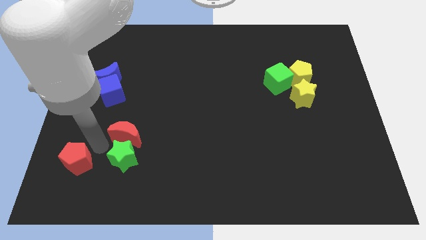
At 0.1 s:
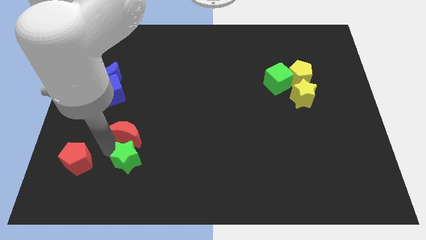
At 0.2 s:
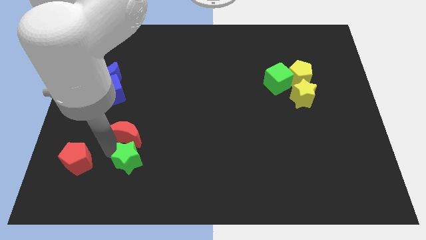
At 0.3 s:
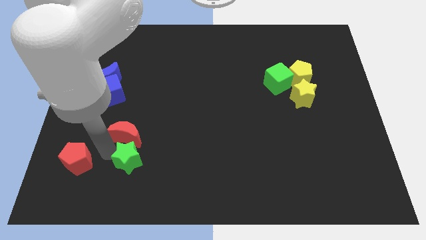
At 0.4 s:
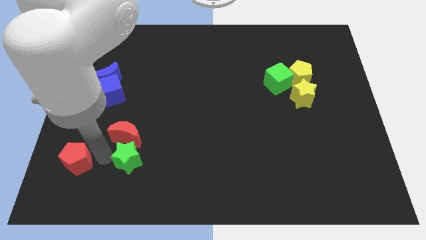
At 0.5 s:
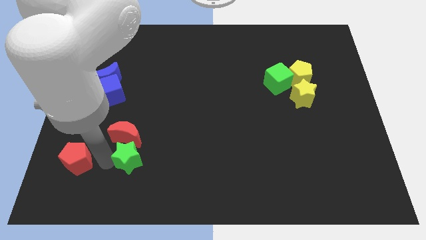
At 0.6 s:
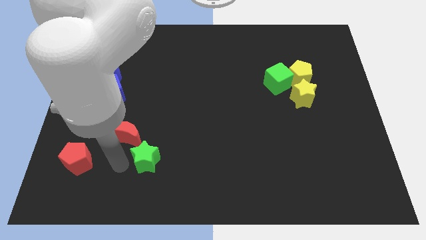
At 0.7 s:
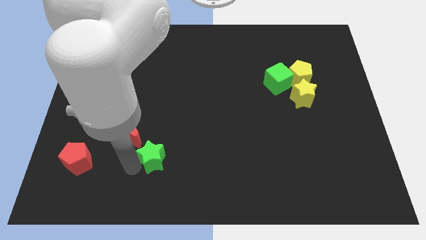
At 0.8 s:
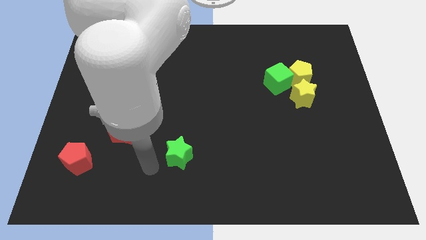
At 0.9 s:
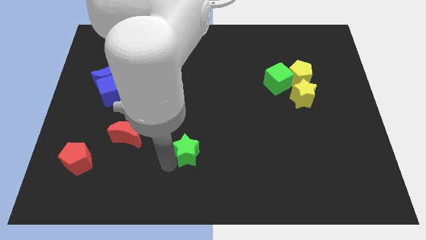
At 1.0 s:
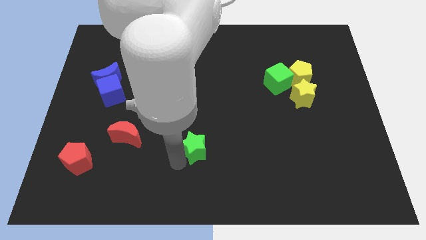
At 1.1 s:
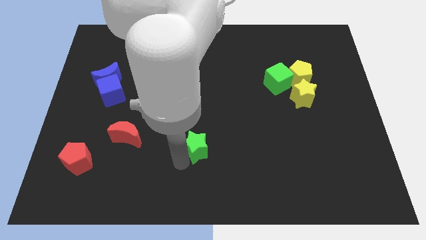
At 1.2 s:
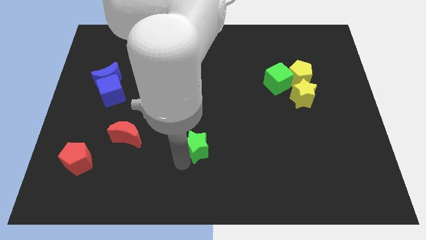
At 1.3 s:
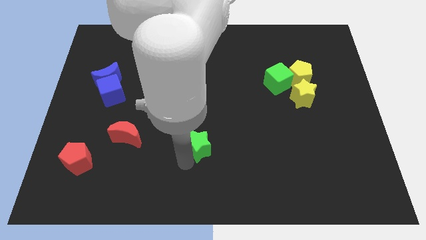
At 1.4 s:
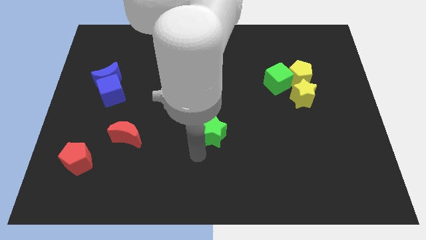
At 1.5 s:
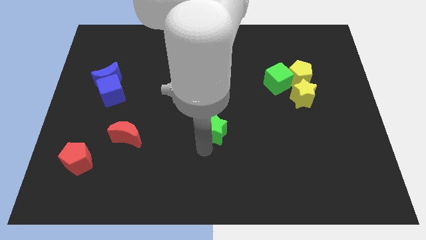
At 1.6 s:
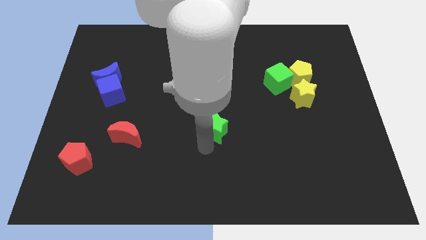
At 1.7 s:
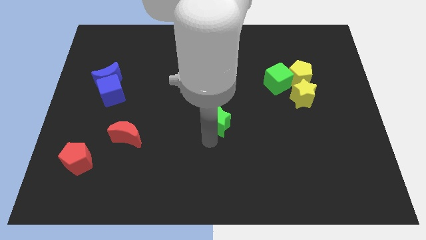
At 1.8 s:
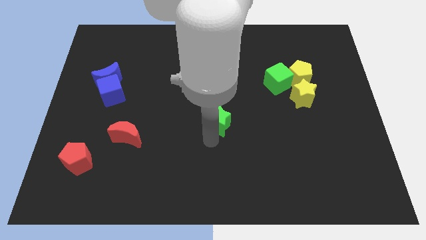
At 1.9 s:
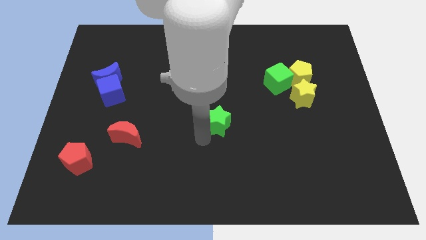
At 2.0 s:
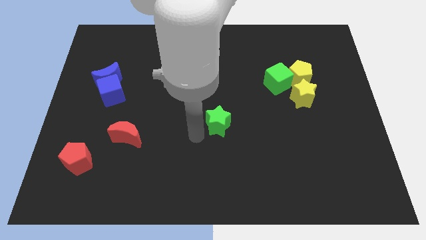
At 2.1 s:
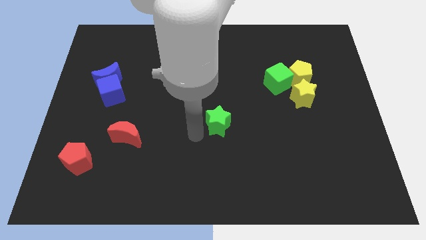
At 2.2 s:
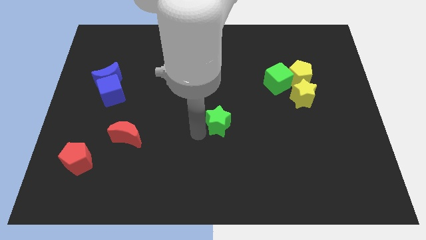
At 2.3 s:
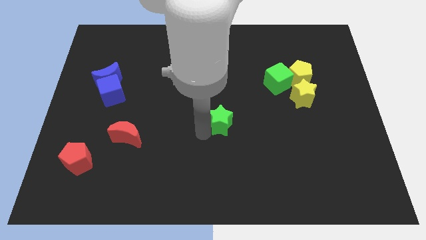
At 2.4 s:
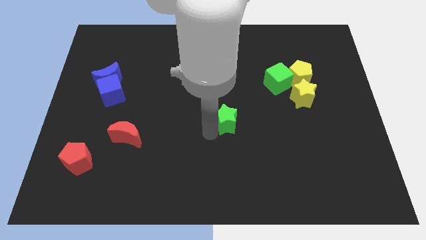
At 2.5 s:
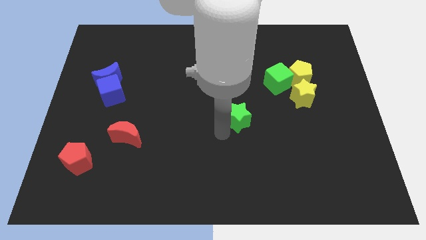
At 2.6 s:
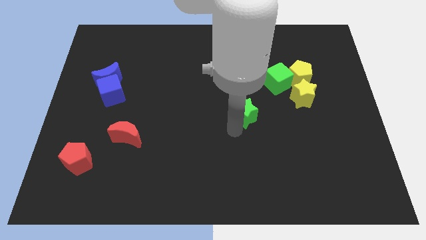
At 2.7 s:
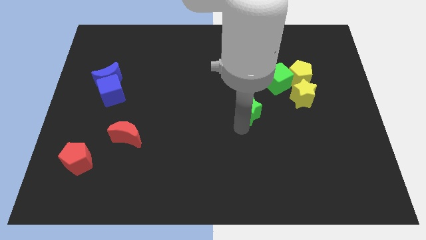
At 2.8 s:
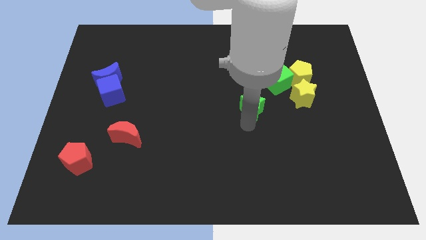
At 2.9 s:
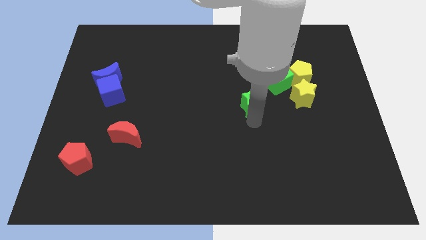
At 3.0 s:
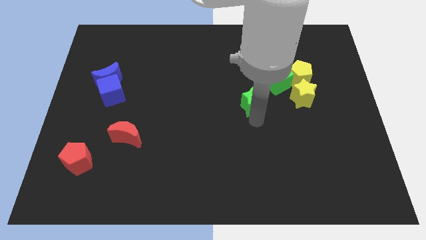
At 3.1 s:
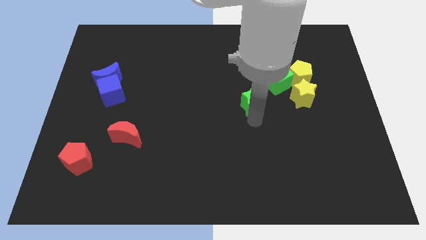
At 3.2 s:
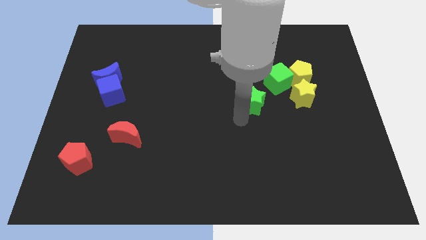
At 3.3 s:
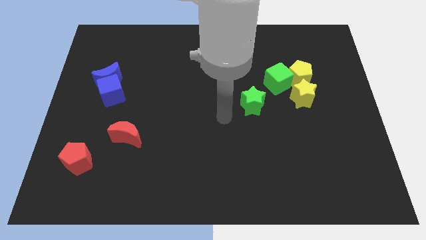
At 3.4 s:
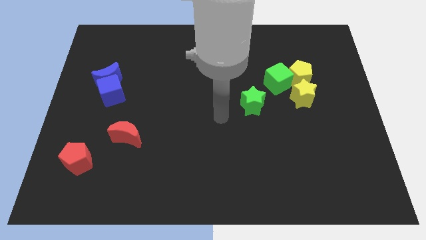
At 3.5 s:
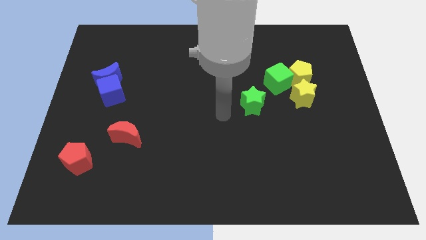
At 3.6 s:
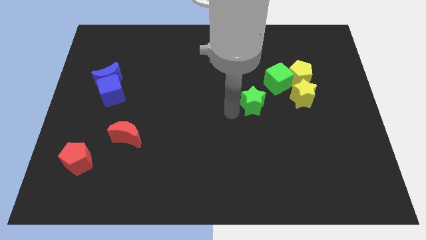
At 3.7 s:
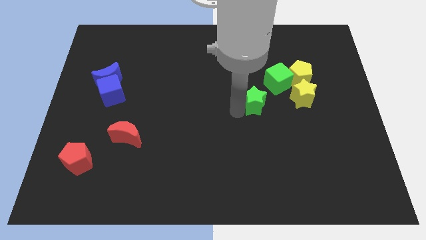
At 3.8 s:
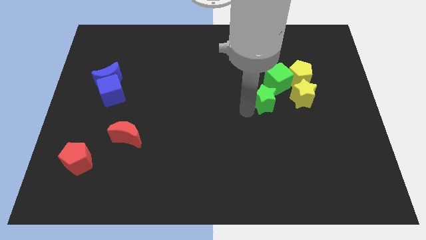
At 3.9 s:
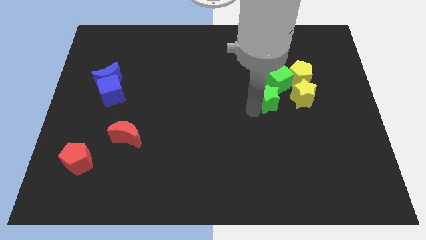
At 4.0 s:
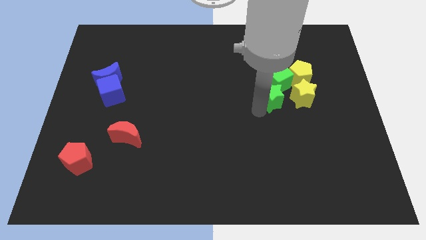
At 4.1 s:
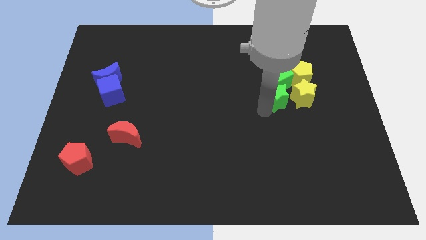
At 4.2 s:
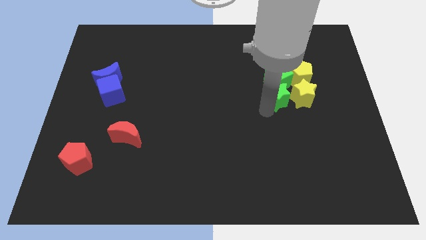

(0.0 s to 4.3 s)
push the green star into the green cube

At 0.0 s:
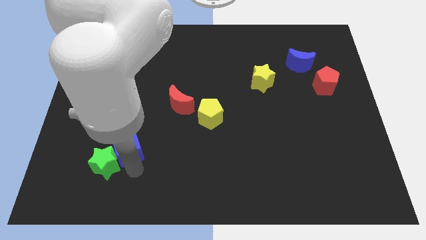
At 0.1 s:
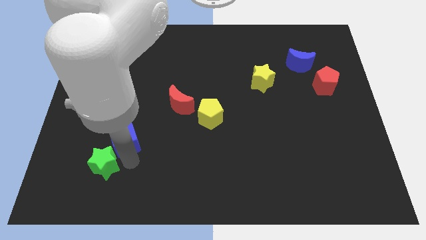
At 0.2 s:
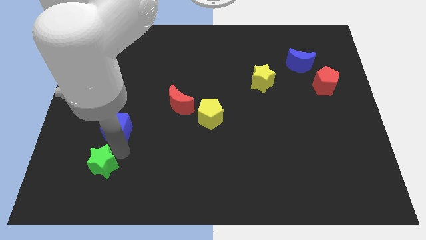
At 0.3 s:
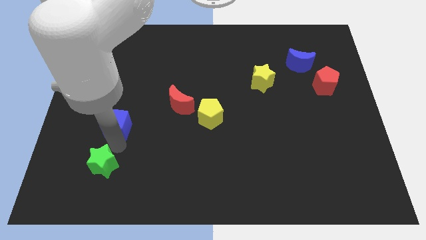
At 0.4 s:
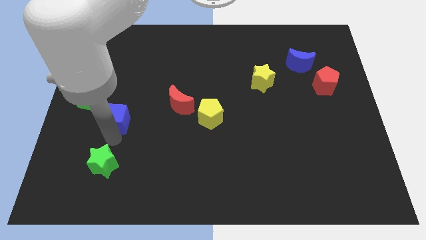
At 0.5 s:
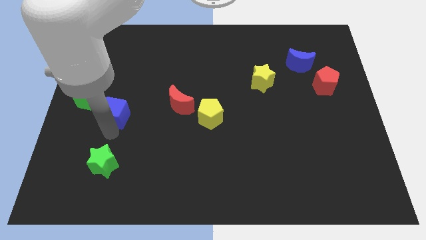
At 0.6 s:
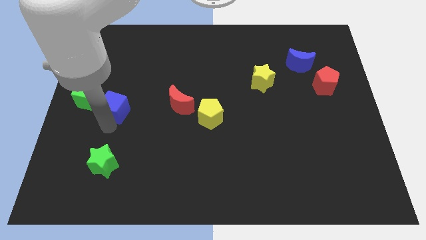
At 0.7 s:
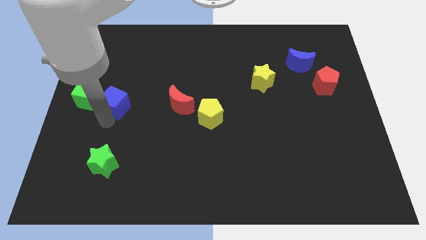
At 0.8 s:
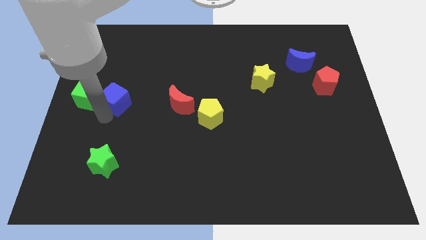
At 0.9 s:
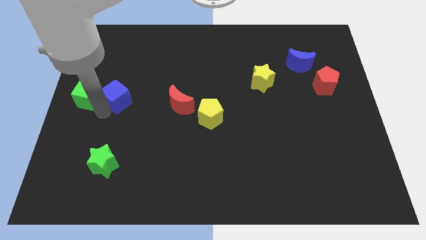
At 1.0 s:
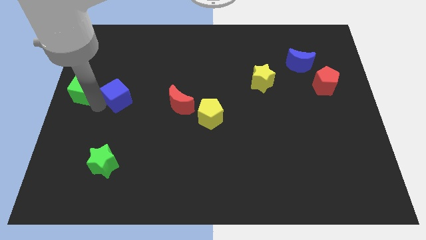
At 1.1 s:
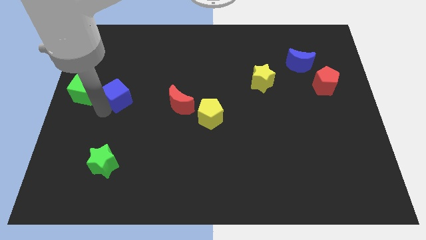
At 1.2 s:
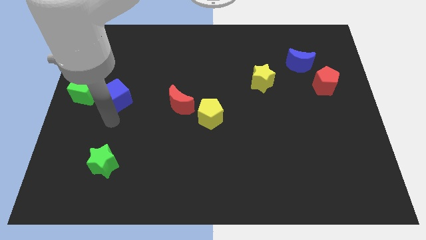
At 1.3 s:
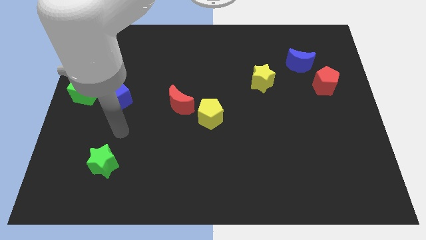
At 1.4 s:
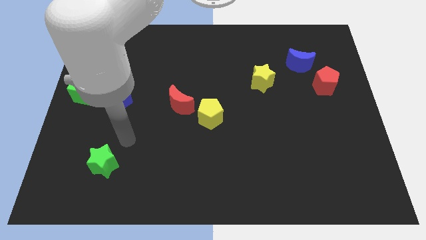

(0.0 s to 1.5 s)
separate the blue cube from the green star

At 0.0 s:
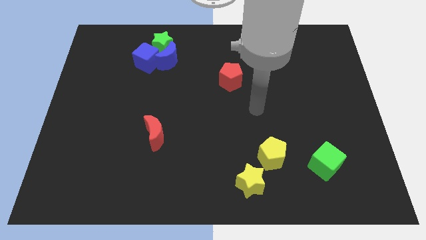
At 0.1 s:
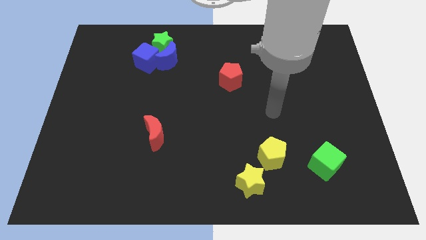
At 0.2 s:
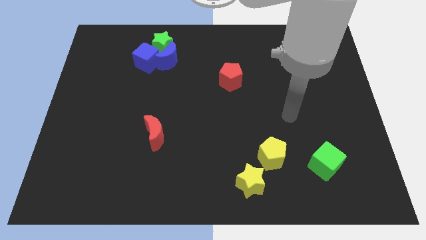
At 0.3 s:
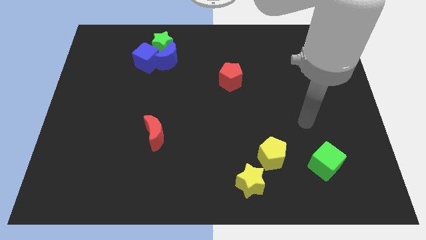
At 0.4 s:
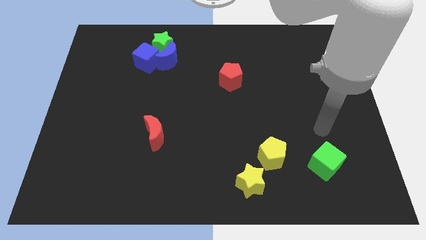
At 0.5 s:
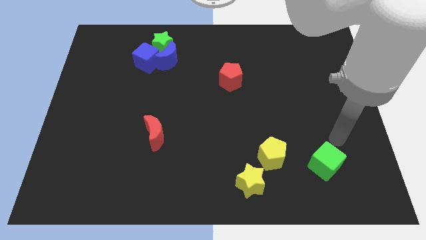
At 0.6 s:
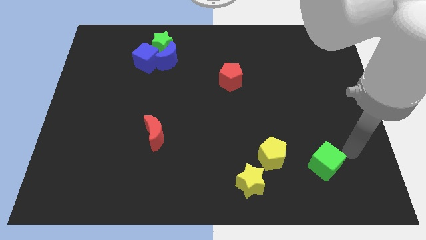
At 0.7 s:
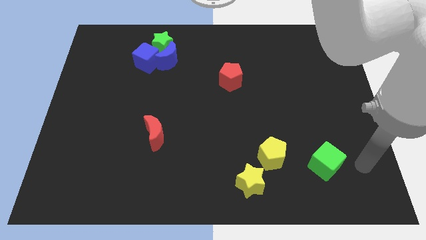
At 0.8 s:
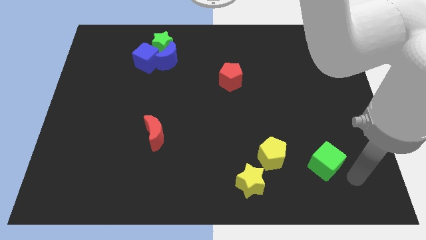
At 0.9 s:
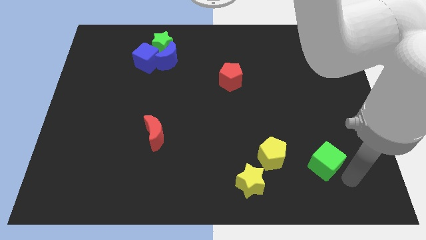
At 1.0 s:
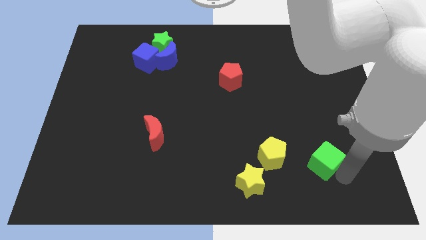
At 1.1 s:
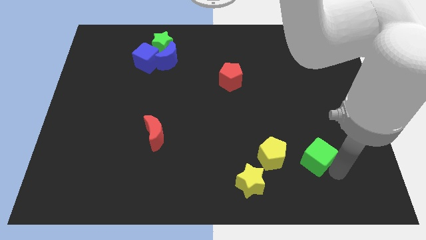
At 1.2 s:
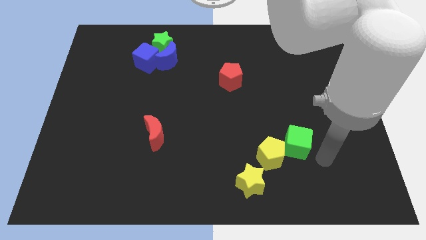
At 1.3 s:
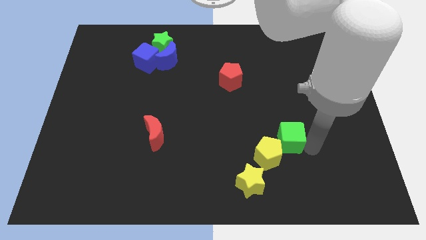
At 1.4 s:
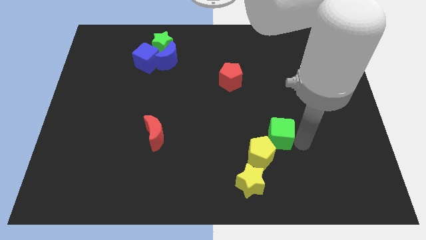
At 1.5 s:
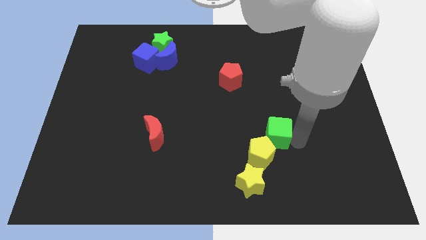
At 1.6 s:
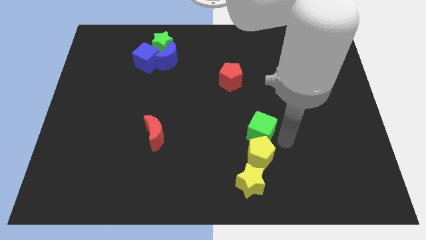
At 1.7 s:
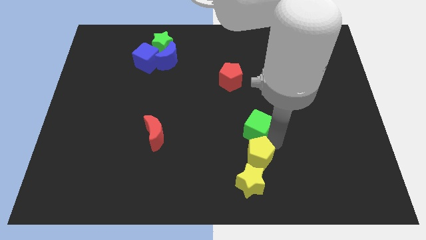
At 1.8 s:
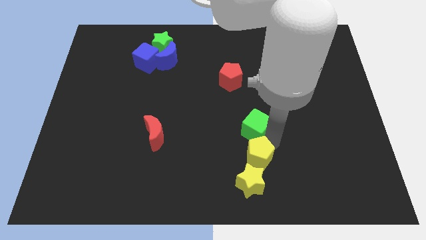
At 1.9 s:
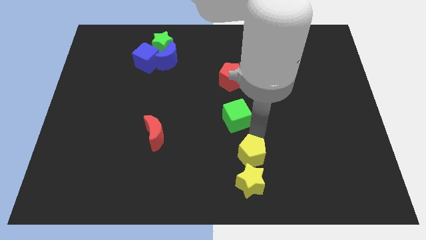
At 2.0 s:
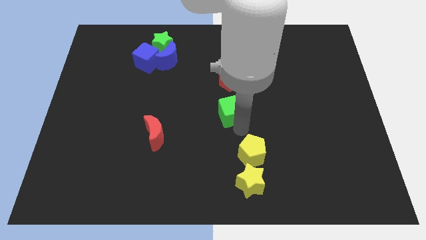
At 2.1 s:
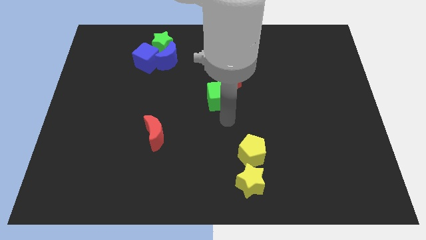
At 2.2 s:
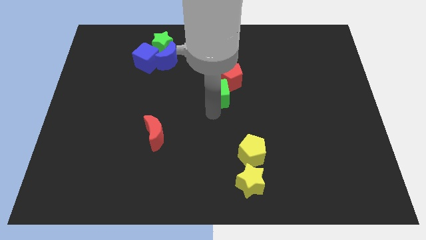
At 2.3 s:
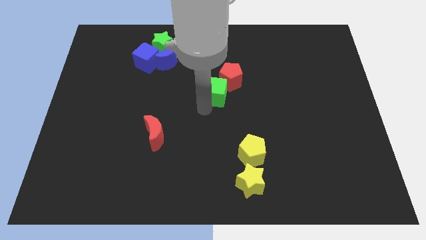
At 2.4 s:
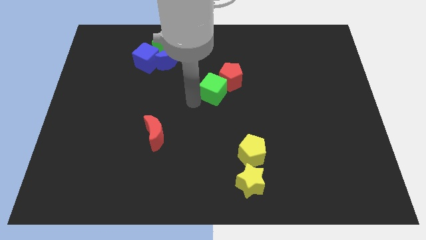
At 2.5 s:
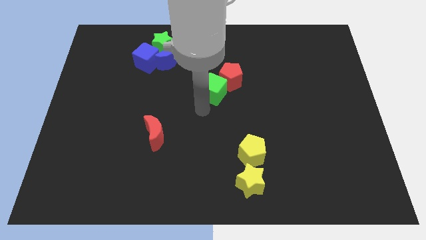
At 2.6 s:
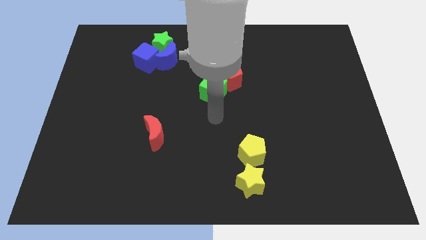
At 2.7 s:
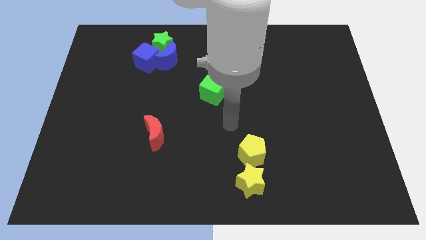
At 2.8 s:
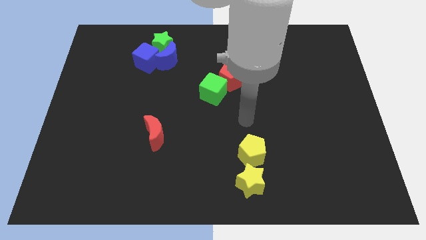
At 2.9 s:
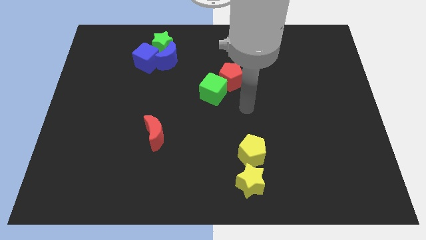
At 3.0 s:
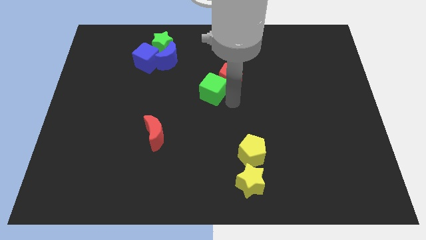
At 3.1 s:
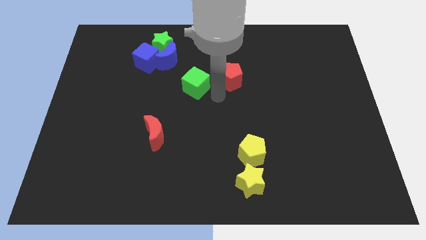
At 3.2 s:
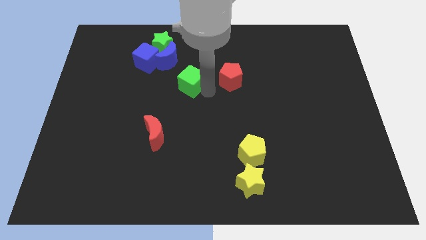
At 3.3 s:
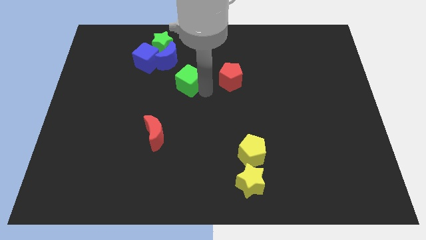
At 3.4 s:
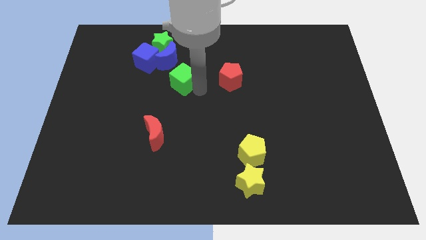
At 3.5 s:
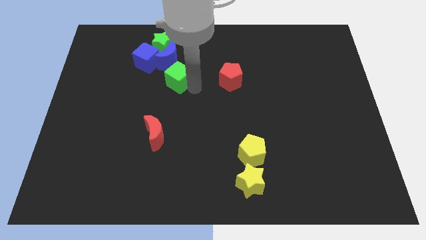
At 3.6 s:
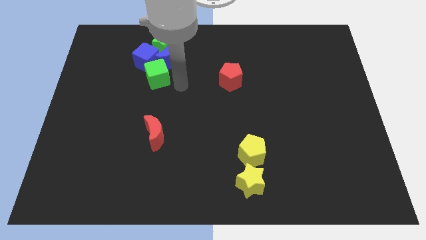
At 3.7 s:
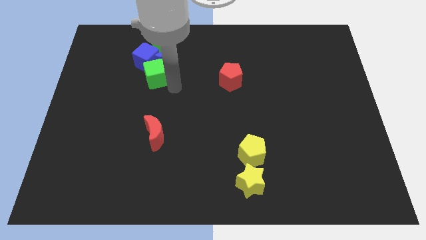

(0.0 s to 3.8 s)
slide the green cube close to the blue cube
